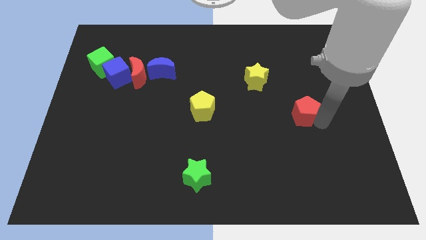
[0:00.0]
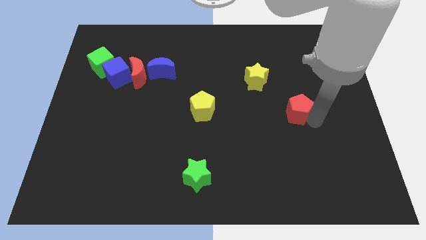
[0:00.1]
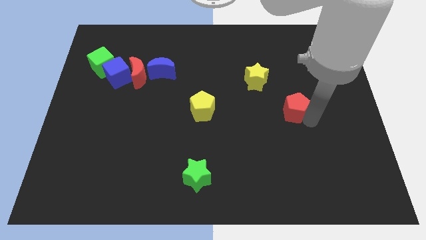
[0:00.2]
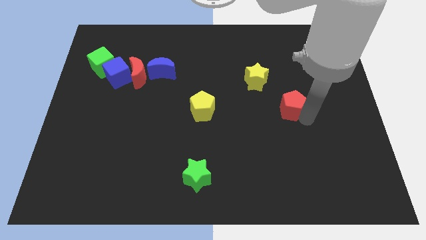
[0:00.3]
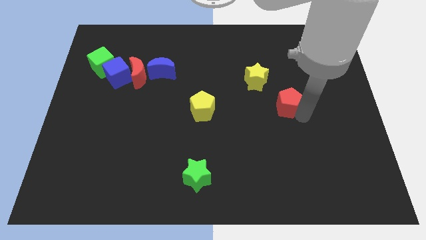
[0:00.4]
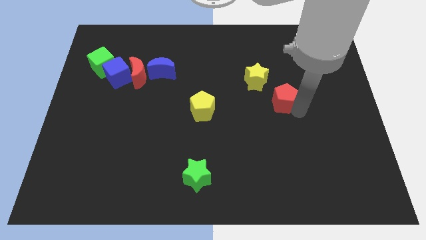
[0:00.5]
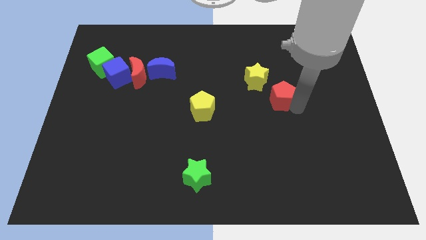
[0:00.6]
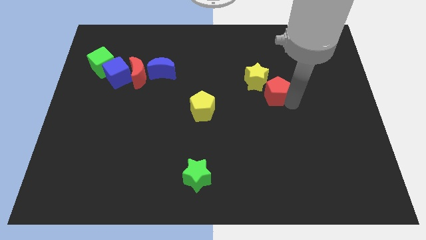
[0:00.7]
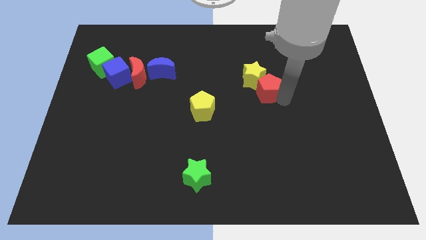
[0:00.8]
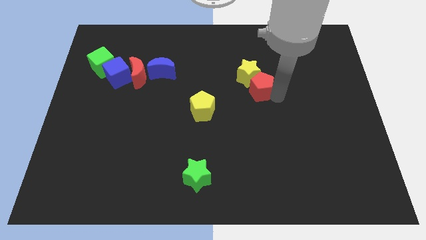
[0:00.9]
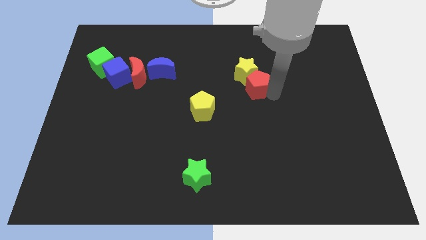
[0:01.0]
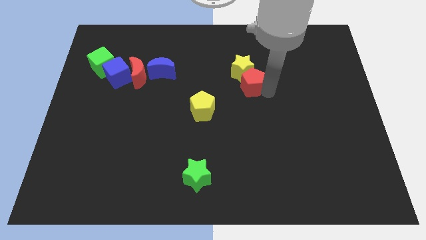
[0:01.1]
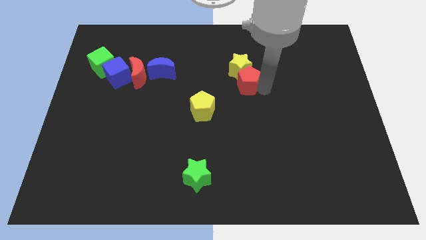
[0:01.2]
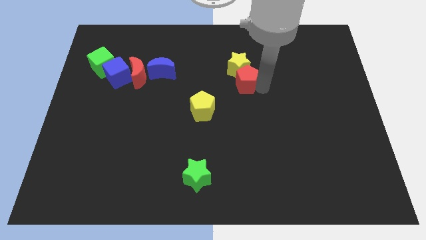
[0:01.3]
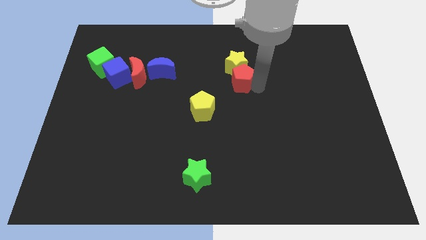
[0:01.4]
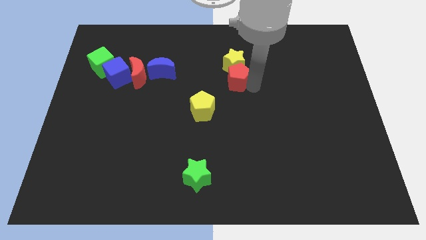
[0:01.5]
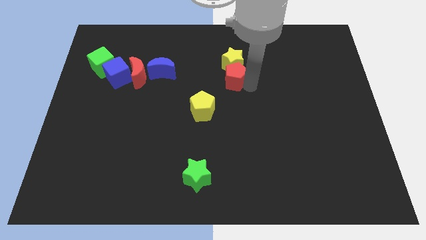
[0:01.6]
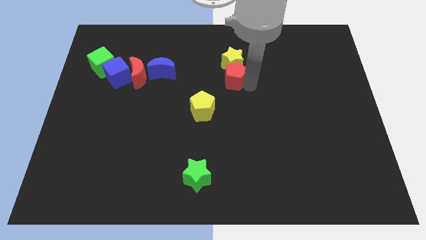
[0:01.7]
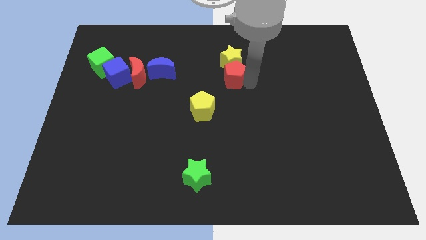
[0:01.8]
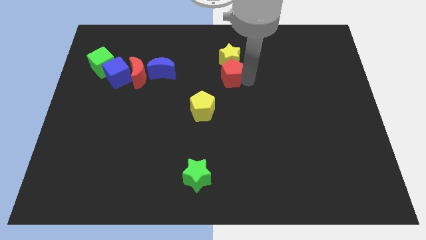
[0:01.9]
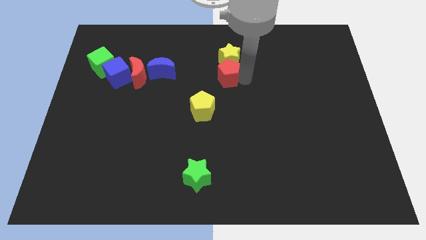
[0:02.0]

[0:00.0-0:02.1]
push the yellow star and red pentagon towards the top center of the board

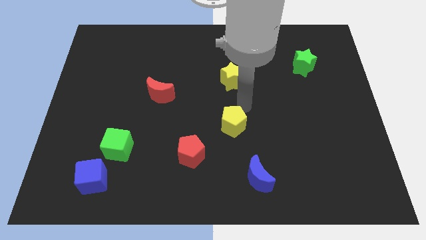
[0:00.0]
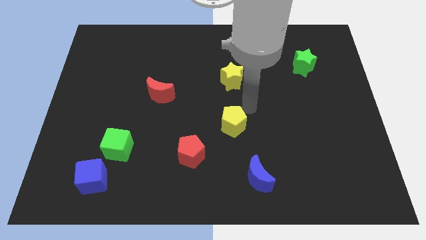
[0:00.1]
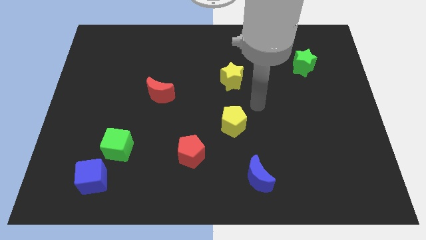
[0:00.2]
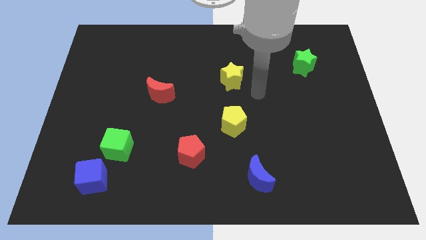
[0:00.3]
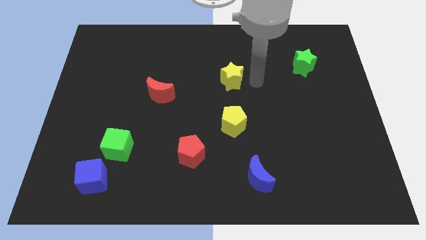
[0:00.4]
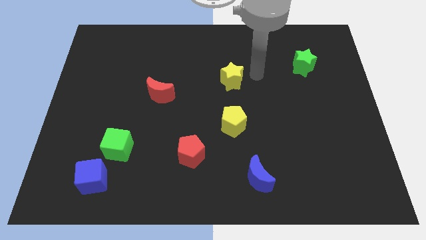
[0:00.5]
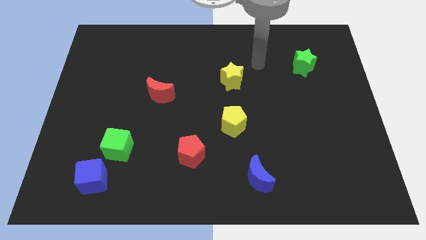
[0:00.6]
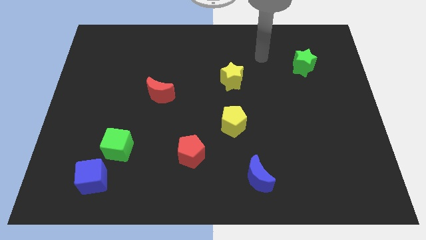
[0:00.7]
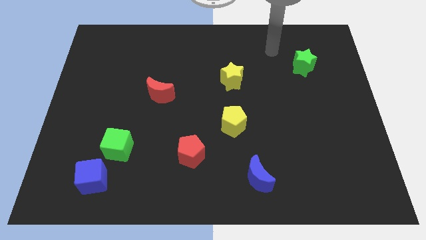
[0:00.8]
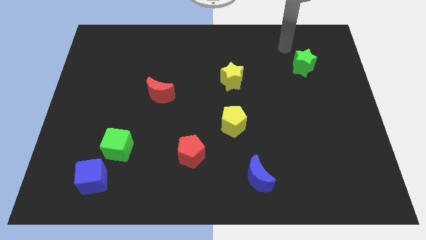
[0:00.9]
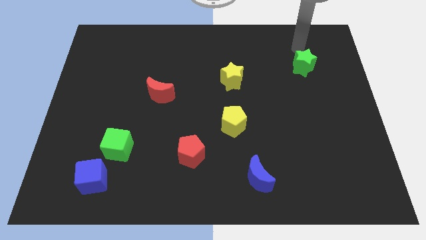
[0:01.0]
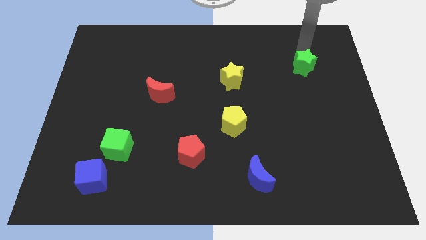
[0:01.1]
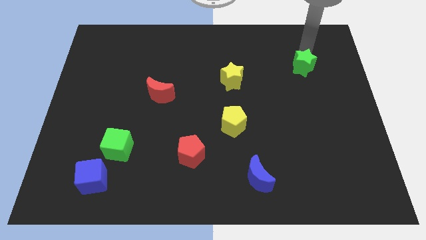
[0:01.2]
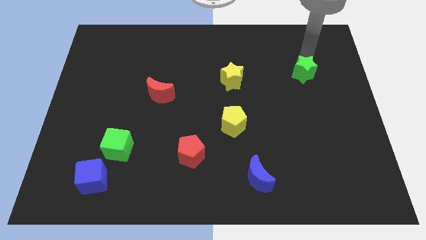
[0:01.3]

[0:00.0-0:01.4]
move your arm to the top of the green star

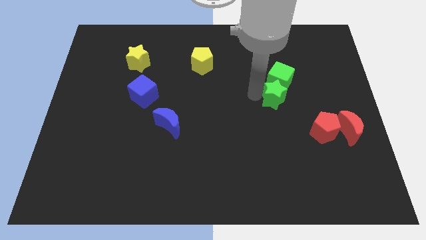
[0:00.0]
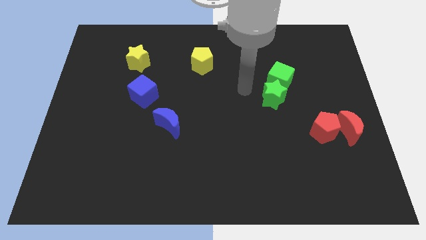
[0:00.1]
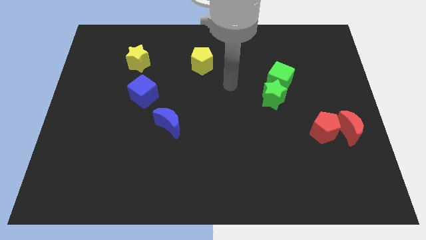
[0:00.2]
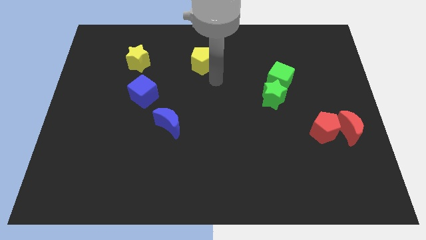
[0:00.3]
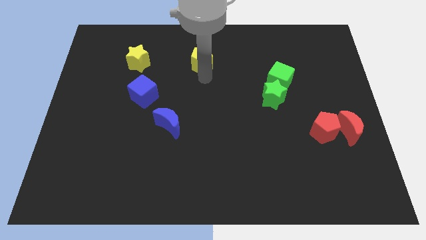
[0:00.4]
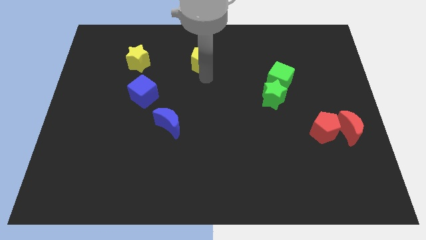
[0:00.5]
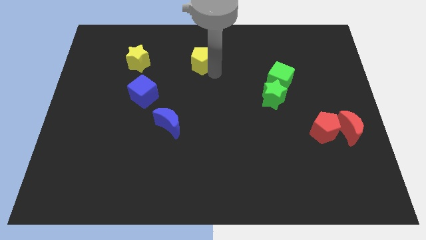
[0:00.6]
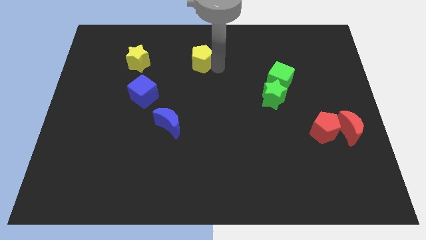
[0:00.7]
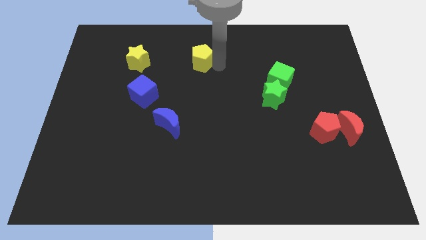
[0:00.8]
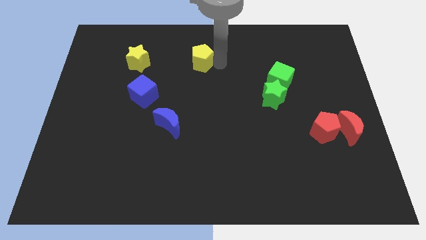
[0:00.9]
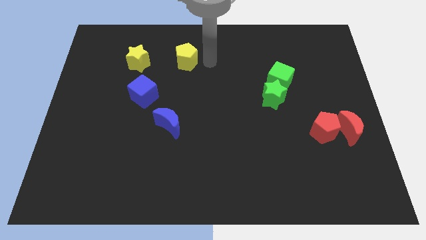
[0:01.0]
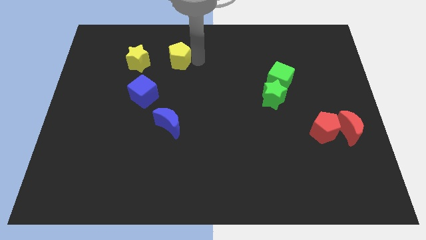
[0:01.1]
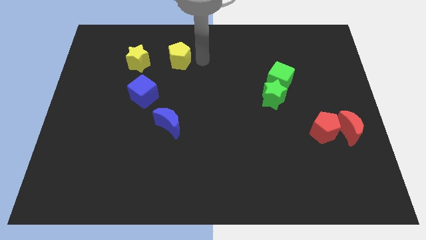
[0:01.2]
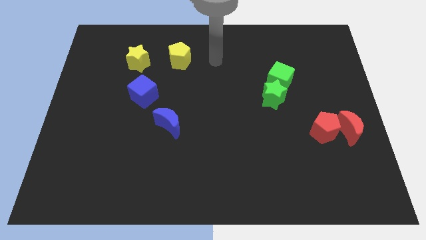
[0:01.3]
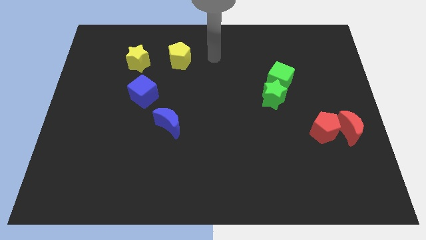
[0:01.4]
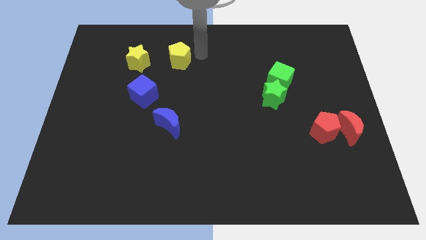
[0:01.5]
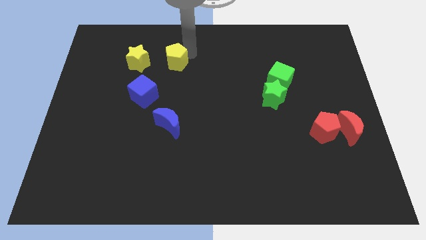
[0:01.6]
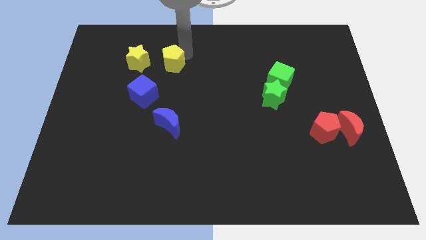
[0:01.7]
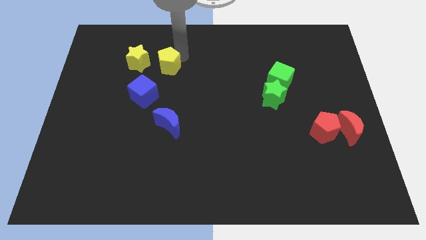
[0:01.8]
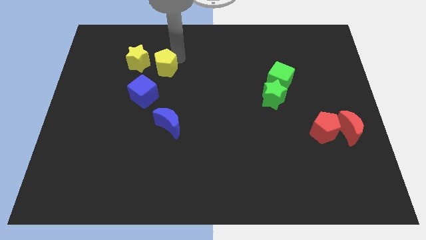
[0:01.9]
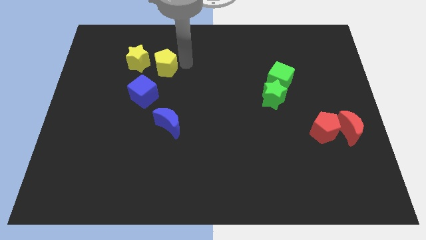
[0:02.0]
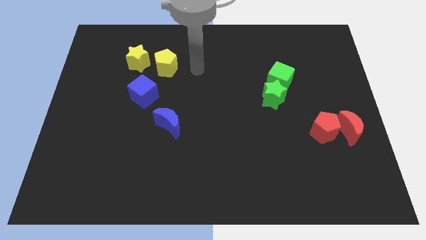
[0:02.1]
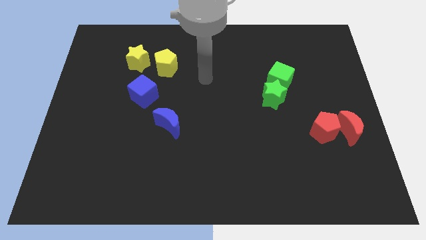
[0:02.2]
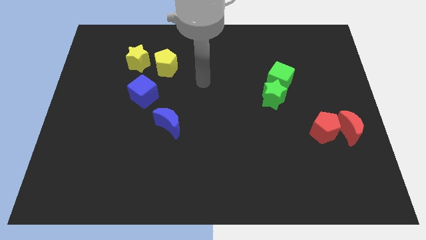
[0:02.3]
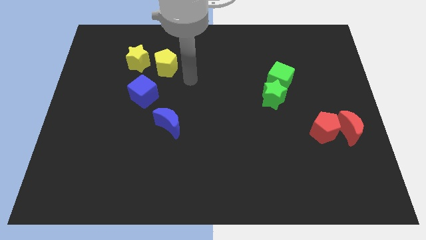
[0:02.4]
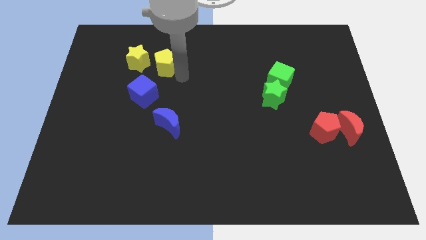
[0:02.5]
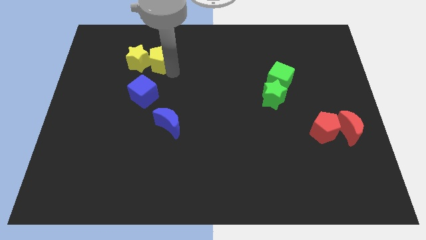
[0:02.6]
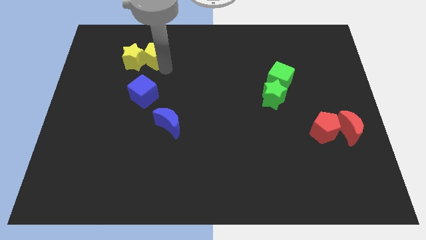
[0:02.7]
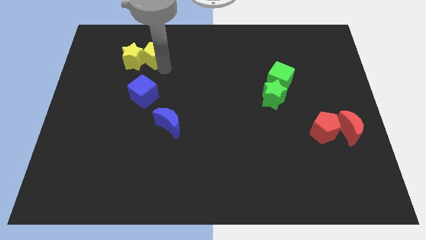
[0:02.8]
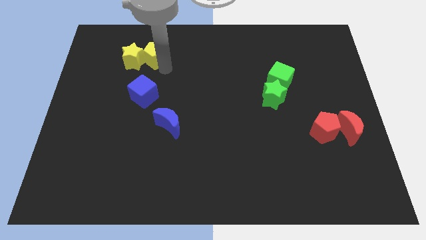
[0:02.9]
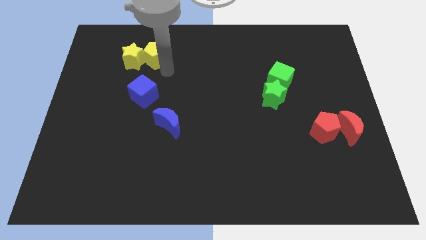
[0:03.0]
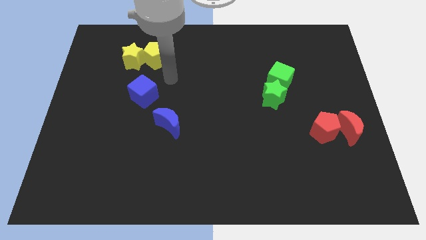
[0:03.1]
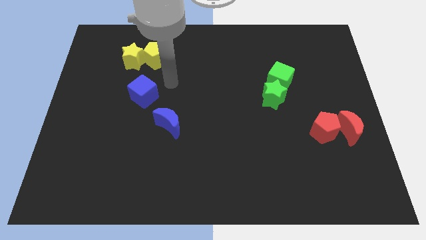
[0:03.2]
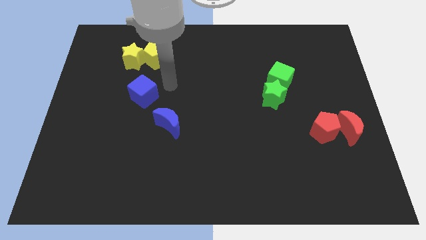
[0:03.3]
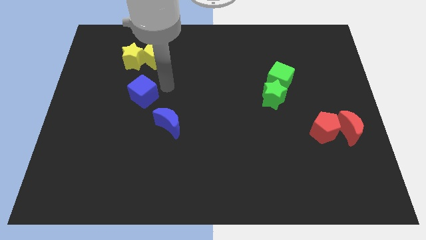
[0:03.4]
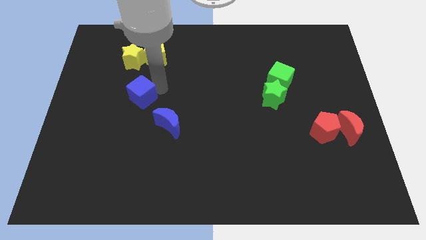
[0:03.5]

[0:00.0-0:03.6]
move yellow pentagon into the yellow star

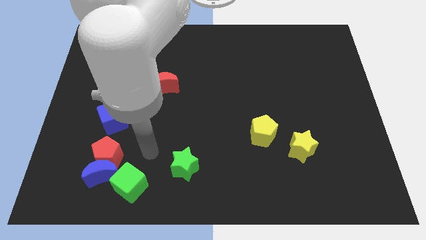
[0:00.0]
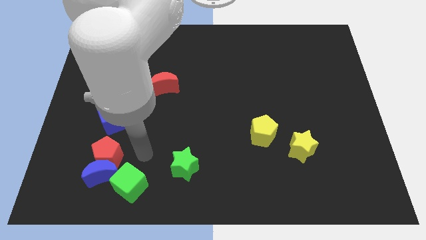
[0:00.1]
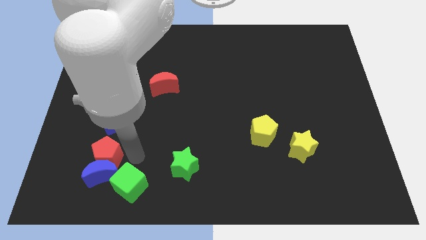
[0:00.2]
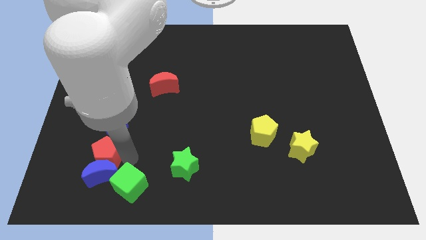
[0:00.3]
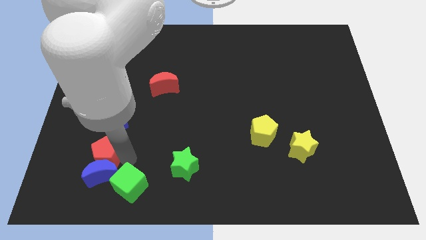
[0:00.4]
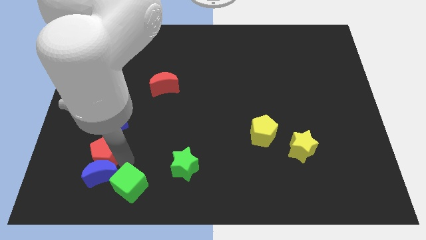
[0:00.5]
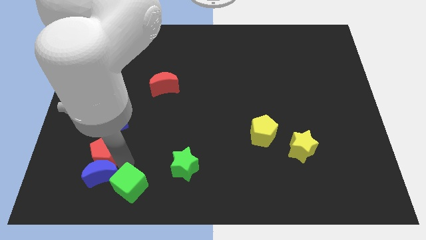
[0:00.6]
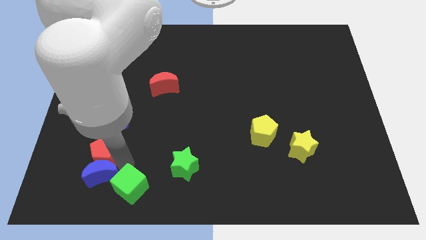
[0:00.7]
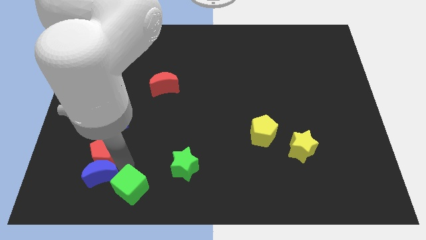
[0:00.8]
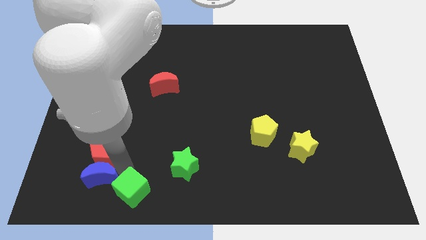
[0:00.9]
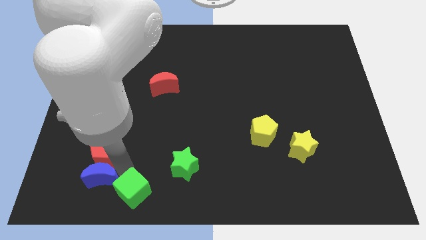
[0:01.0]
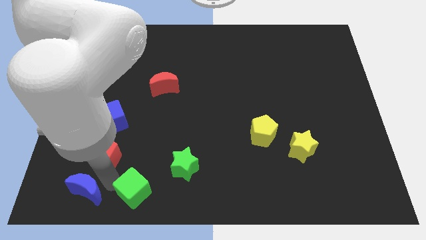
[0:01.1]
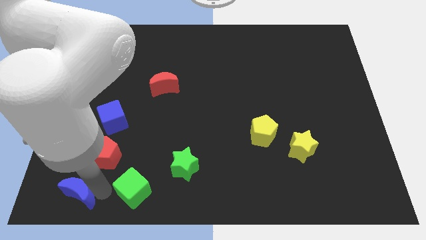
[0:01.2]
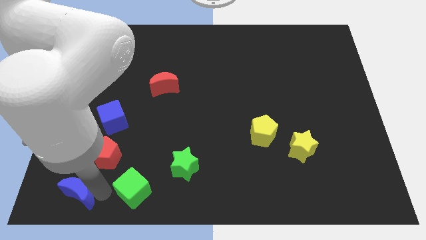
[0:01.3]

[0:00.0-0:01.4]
separate the blue cube from the red pentagon and green cube

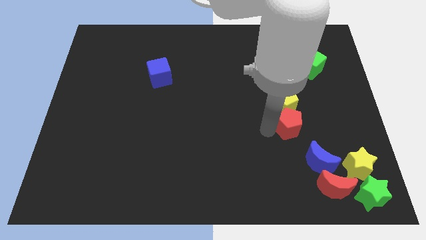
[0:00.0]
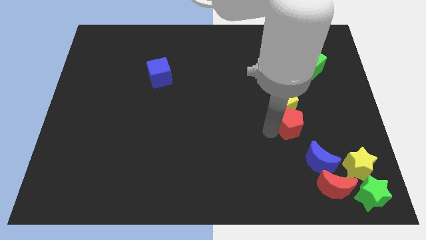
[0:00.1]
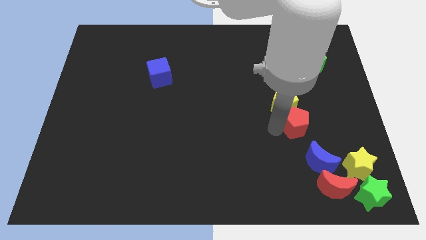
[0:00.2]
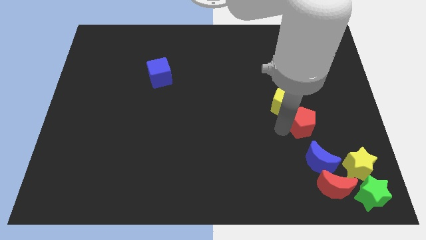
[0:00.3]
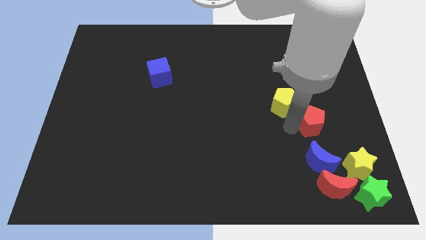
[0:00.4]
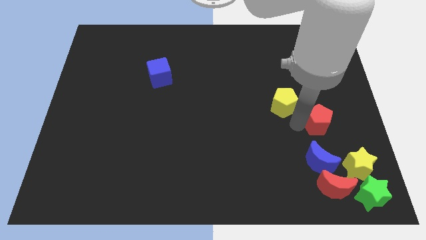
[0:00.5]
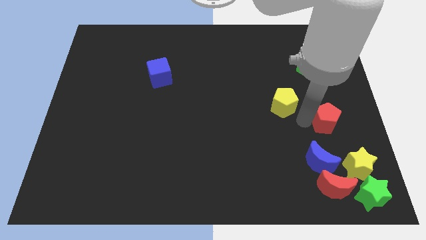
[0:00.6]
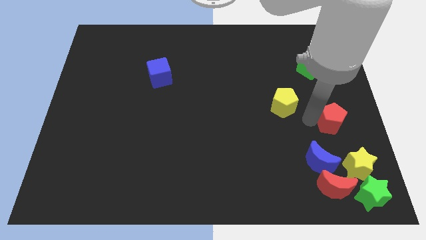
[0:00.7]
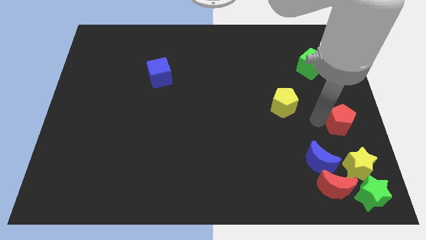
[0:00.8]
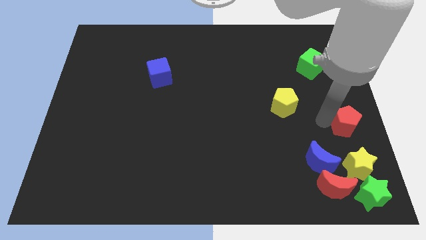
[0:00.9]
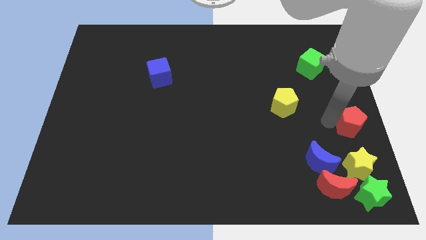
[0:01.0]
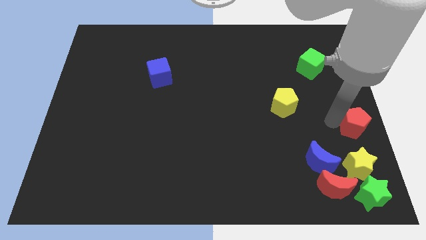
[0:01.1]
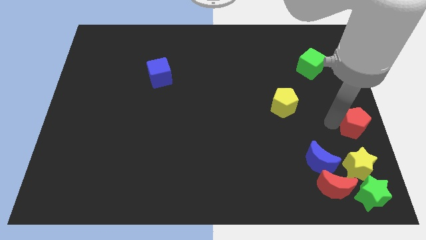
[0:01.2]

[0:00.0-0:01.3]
move red pentagon to the right middle of the board
